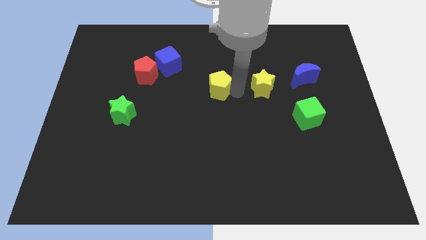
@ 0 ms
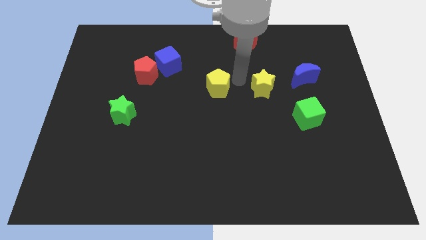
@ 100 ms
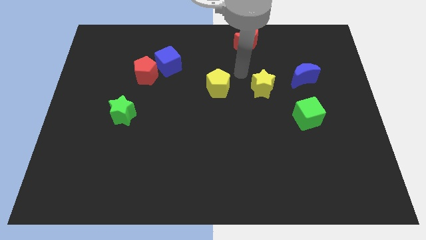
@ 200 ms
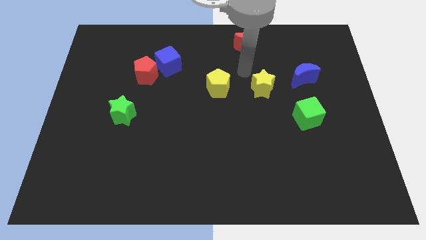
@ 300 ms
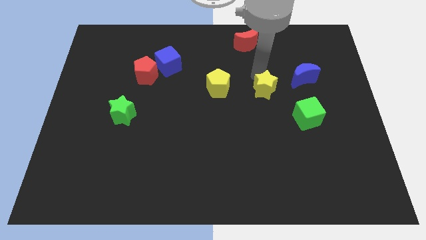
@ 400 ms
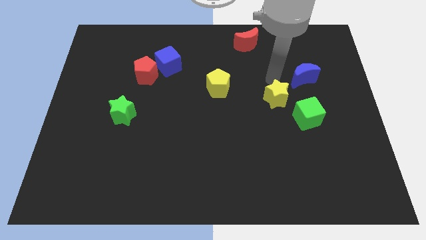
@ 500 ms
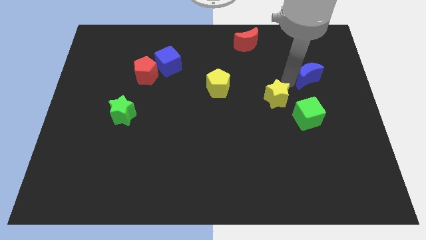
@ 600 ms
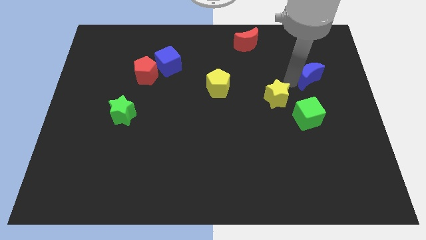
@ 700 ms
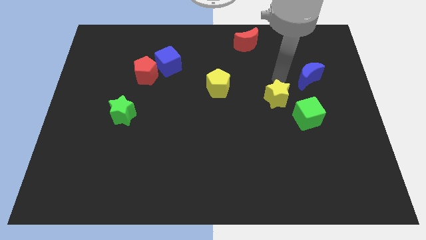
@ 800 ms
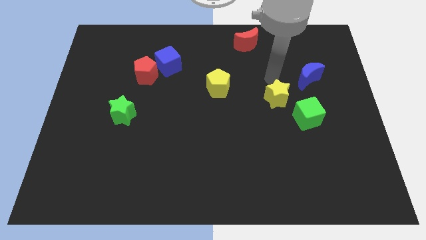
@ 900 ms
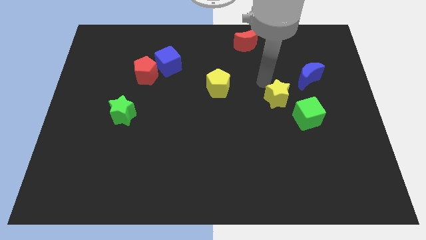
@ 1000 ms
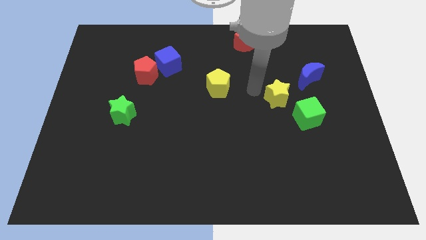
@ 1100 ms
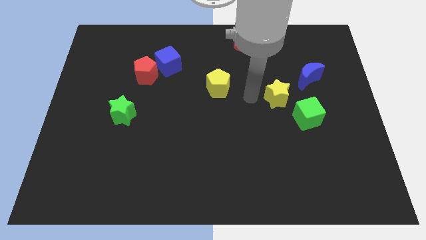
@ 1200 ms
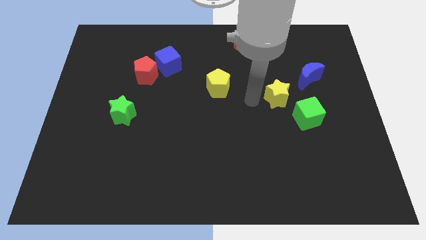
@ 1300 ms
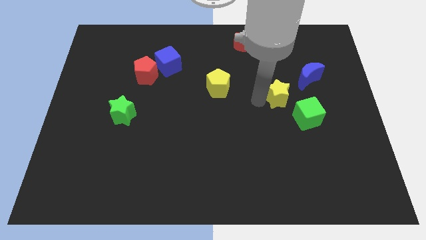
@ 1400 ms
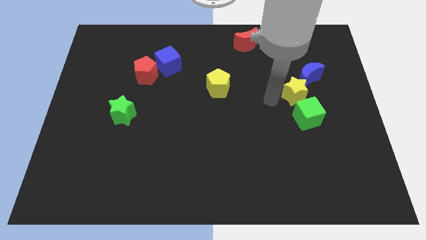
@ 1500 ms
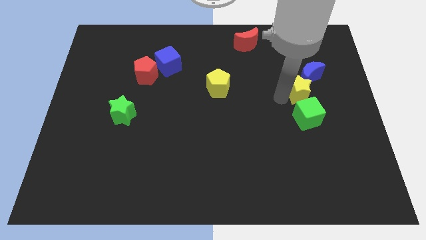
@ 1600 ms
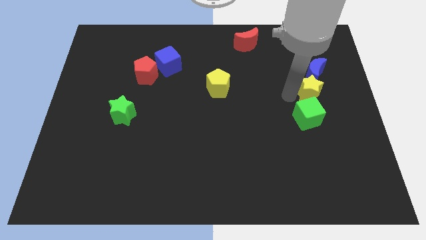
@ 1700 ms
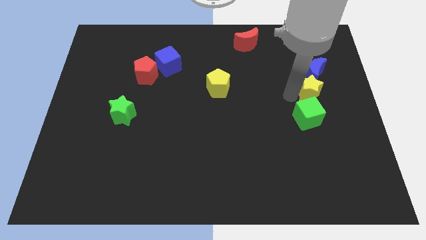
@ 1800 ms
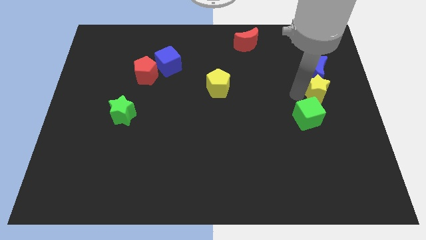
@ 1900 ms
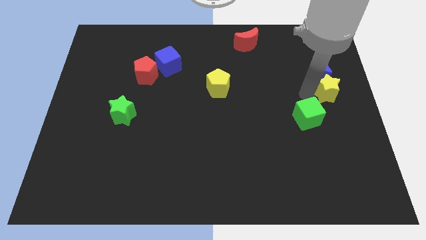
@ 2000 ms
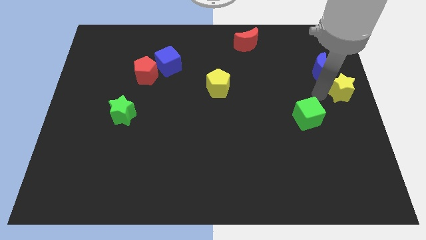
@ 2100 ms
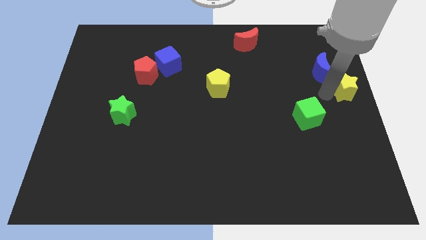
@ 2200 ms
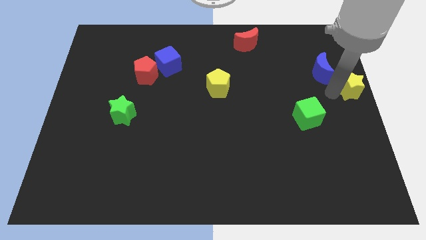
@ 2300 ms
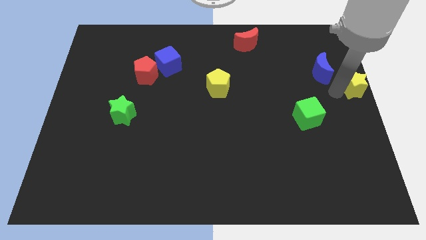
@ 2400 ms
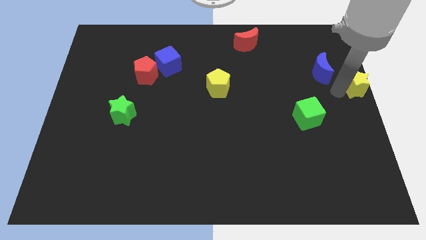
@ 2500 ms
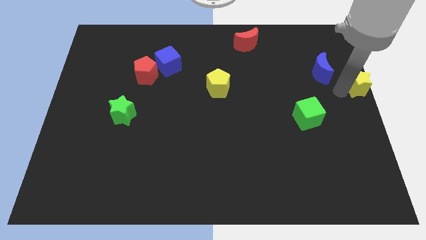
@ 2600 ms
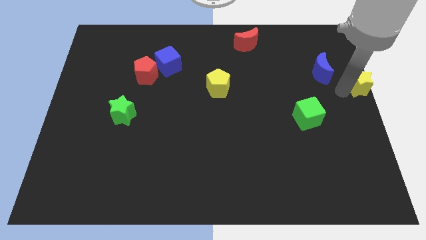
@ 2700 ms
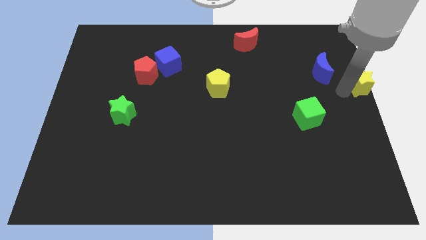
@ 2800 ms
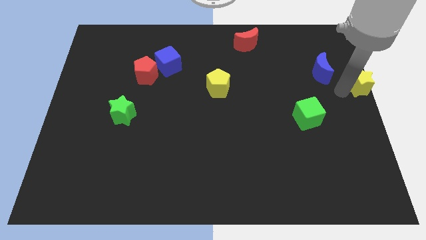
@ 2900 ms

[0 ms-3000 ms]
place the yellow star at the center right of the board

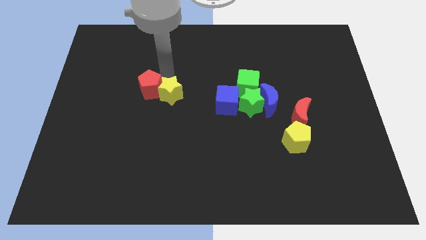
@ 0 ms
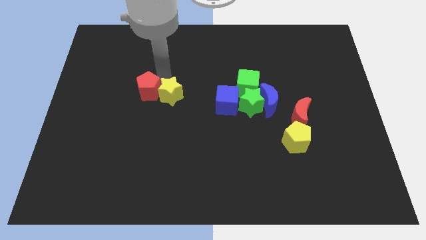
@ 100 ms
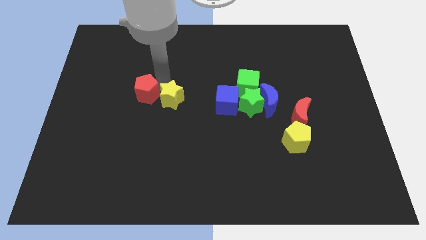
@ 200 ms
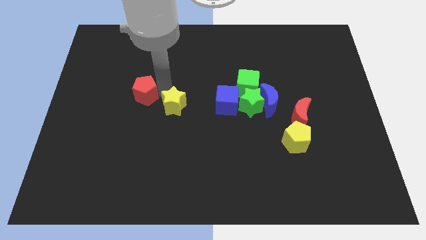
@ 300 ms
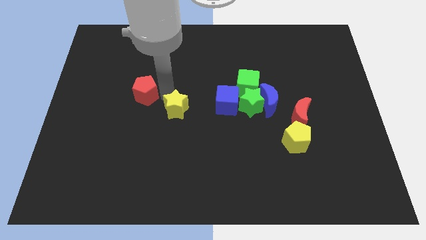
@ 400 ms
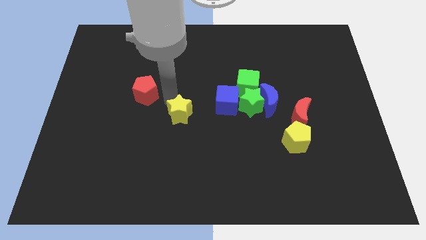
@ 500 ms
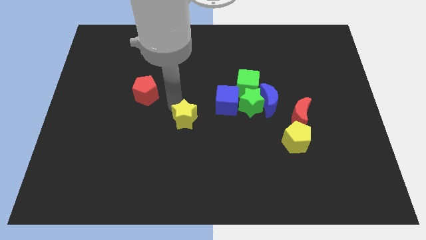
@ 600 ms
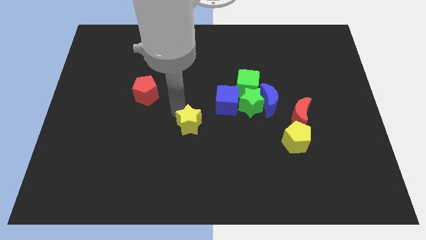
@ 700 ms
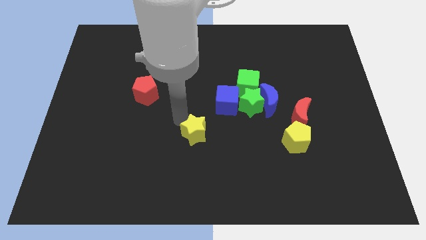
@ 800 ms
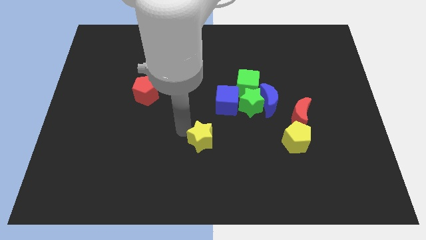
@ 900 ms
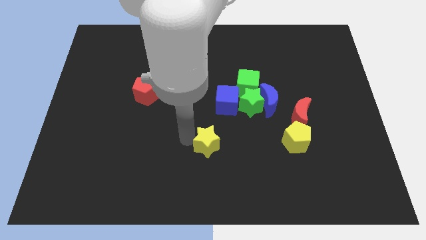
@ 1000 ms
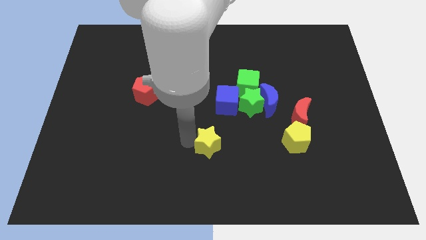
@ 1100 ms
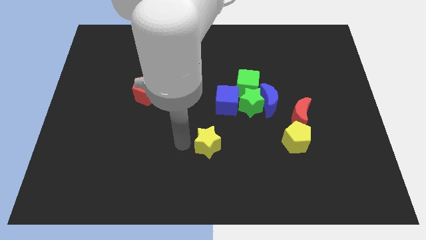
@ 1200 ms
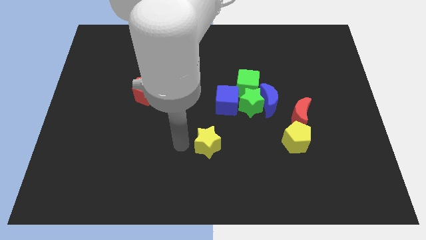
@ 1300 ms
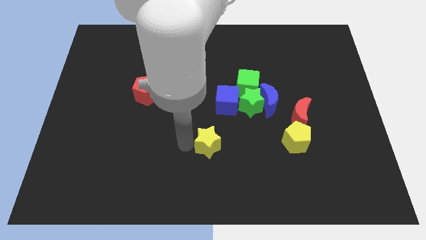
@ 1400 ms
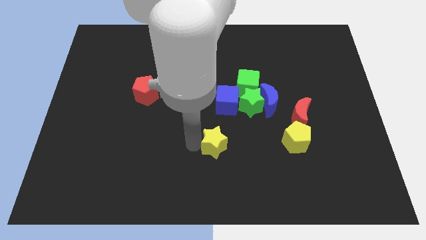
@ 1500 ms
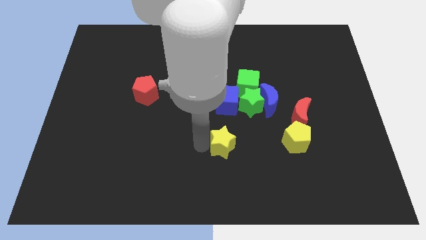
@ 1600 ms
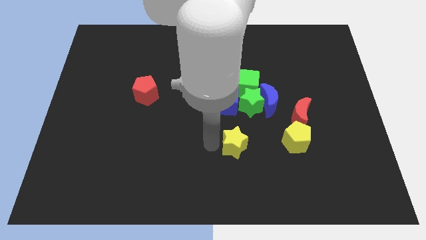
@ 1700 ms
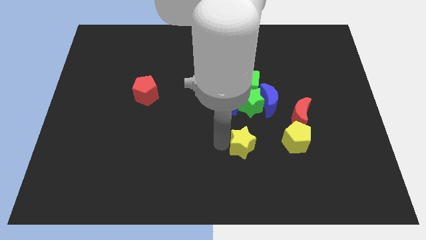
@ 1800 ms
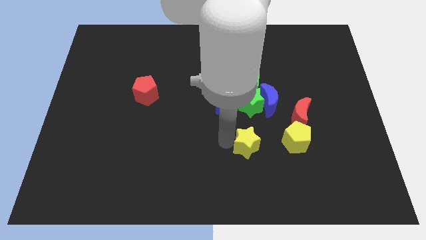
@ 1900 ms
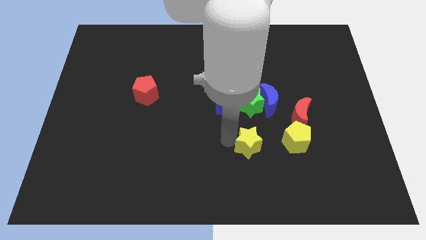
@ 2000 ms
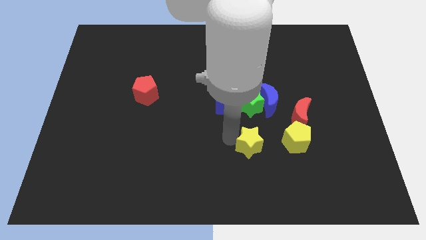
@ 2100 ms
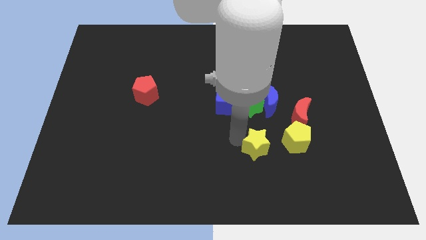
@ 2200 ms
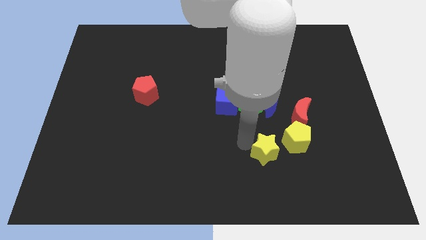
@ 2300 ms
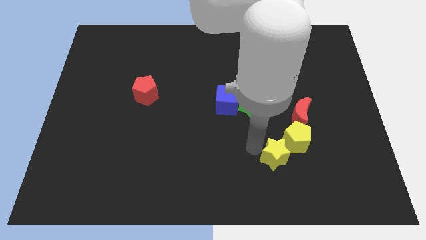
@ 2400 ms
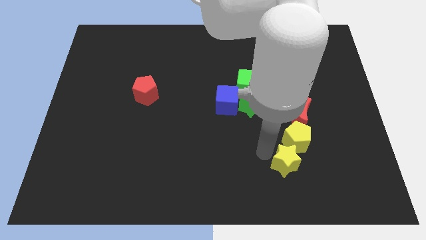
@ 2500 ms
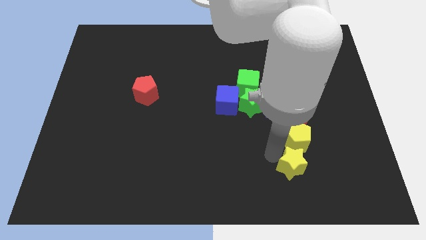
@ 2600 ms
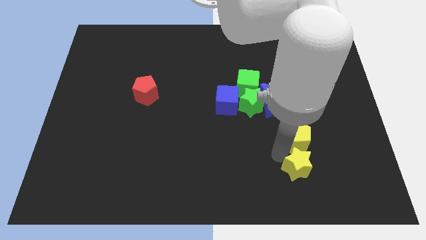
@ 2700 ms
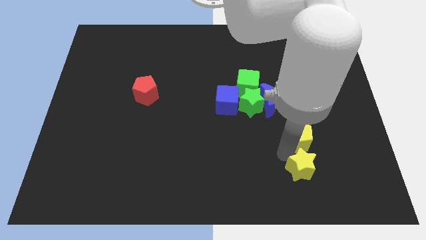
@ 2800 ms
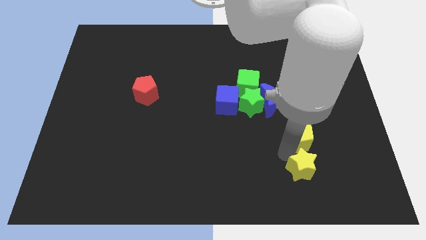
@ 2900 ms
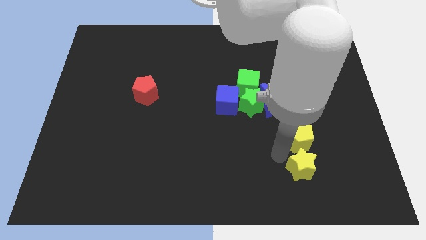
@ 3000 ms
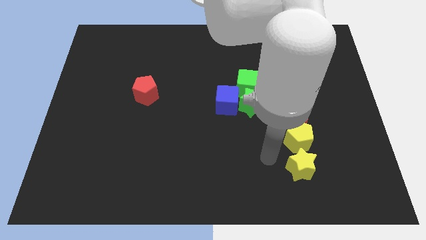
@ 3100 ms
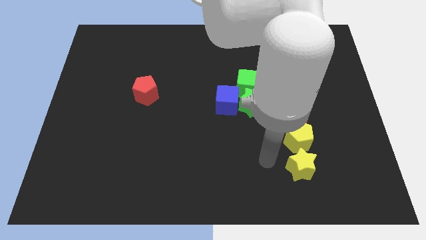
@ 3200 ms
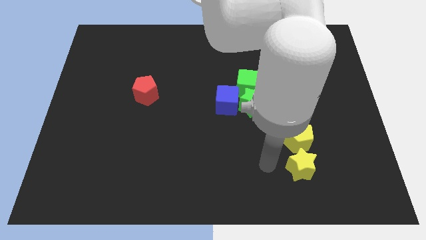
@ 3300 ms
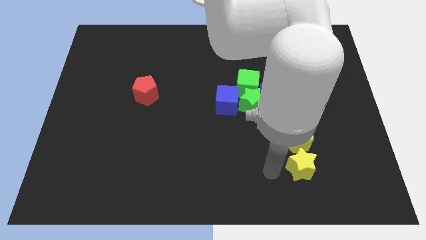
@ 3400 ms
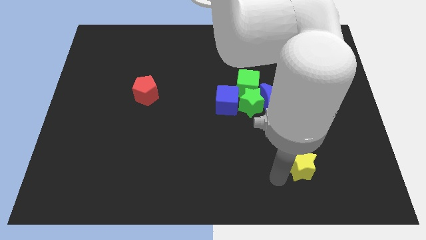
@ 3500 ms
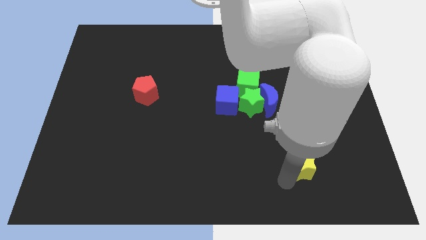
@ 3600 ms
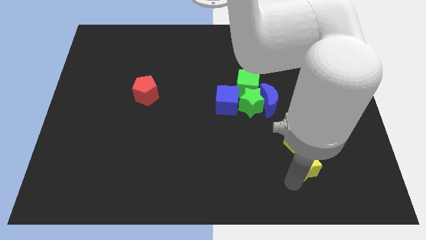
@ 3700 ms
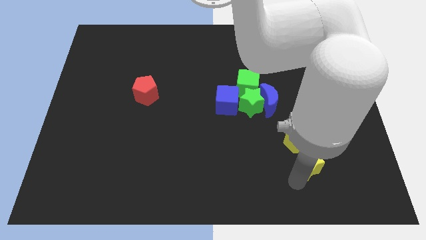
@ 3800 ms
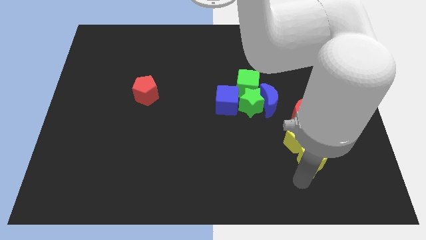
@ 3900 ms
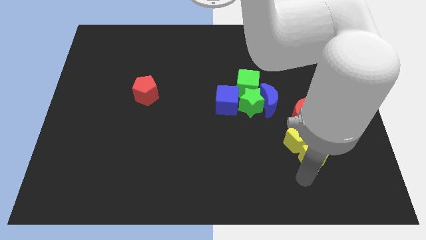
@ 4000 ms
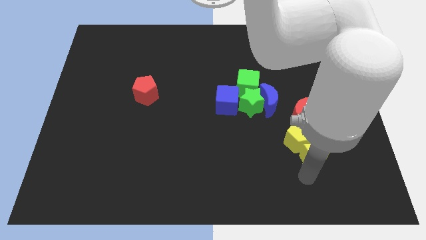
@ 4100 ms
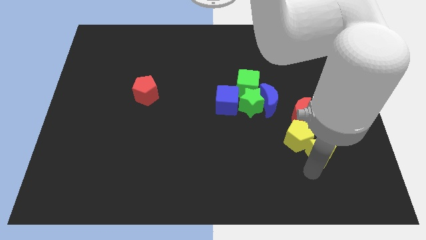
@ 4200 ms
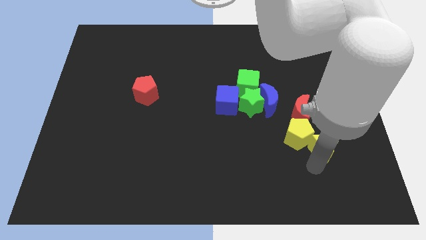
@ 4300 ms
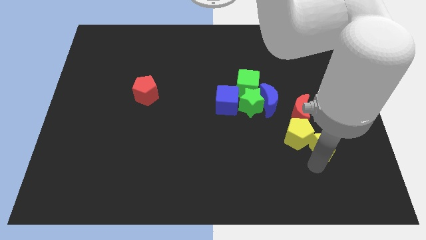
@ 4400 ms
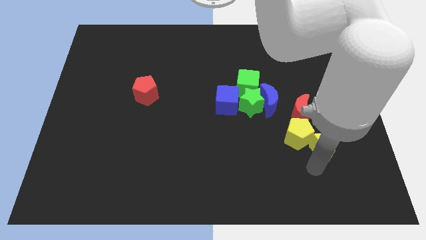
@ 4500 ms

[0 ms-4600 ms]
push the yello star into the yellow pentagon

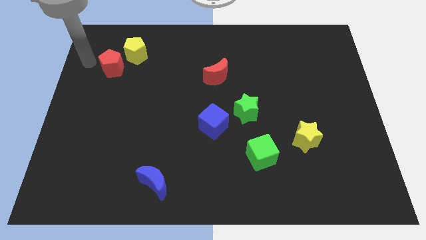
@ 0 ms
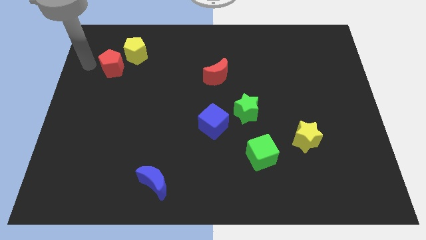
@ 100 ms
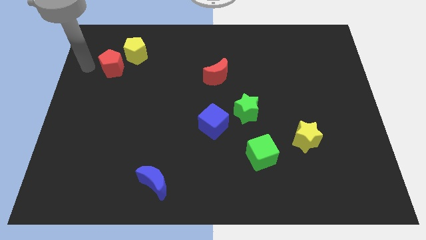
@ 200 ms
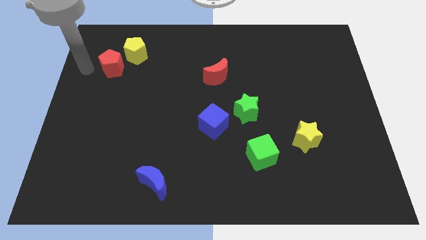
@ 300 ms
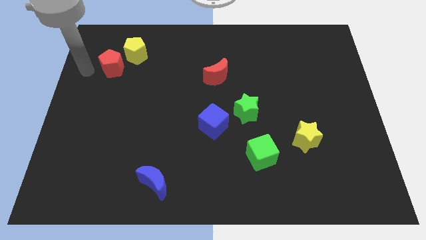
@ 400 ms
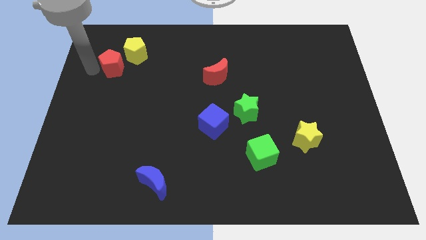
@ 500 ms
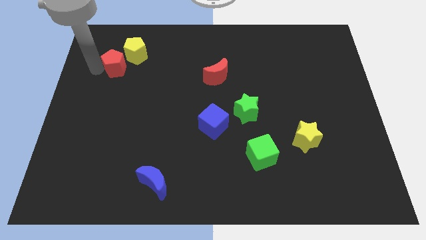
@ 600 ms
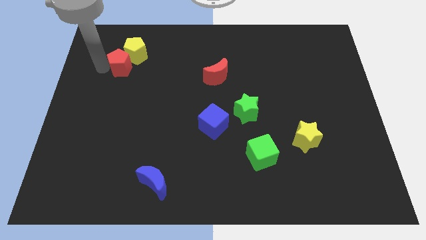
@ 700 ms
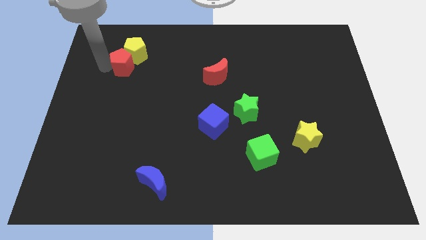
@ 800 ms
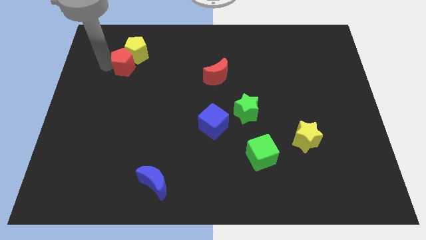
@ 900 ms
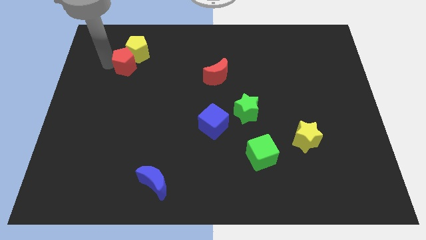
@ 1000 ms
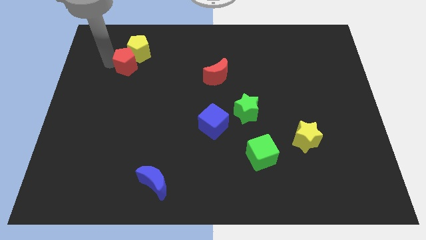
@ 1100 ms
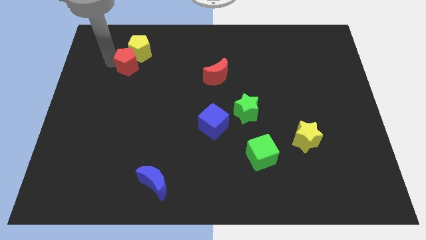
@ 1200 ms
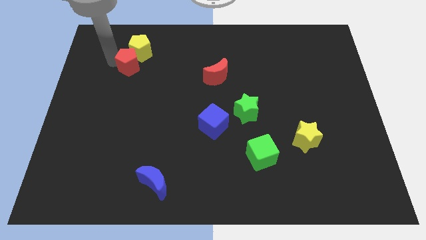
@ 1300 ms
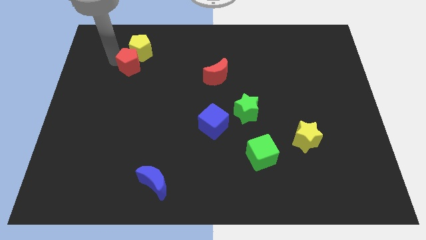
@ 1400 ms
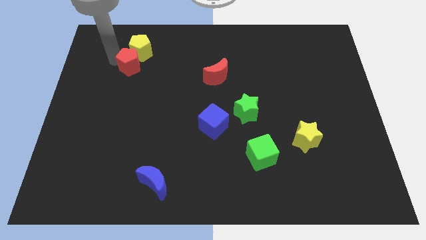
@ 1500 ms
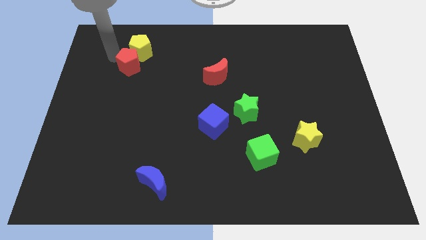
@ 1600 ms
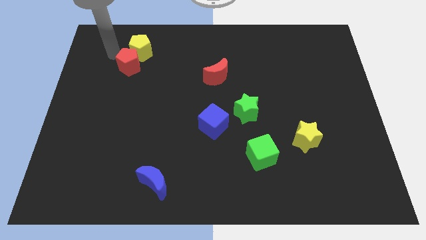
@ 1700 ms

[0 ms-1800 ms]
push the red pentagon into the yellow pentagon
